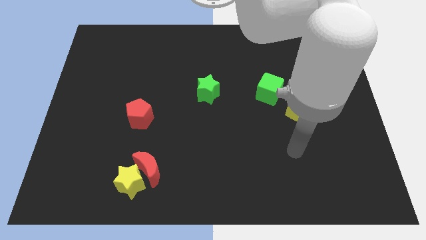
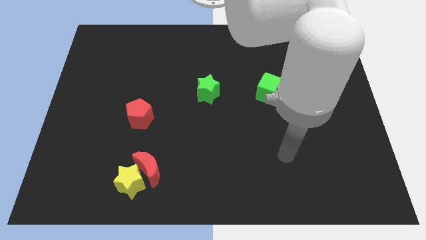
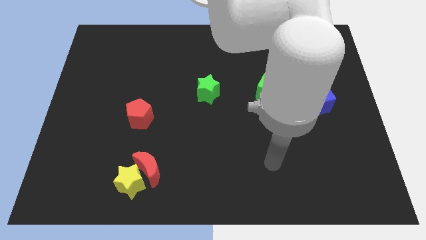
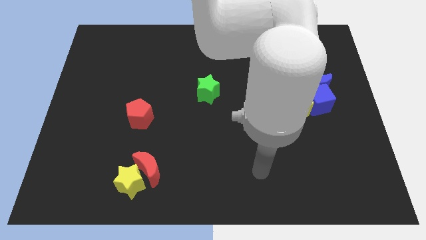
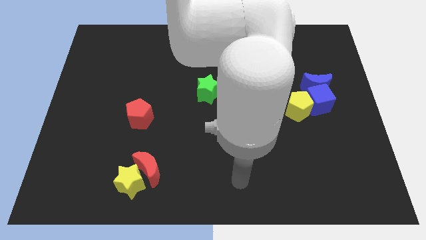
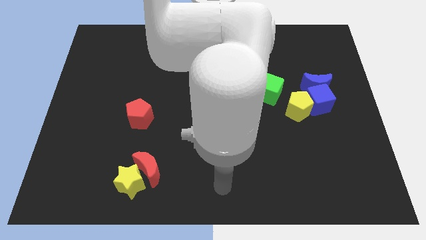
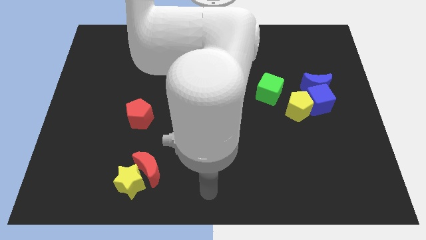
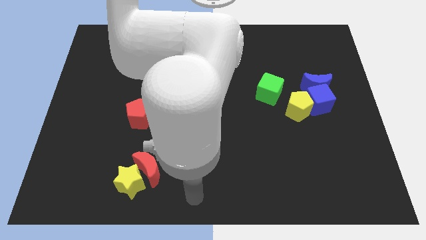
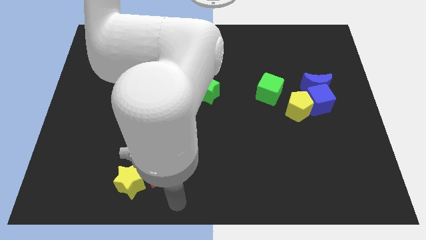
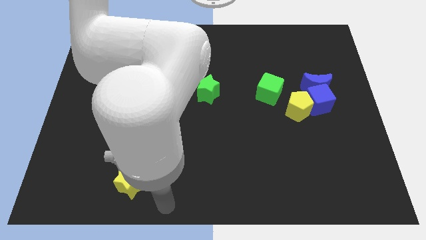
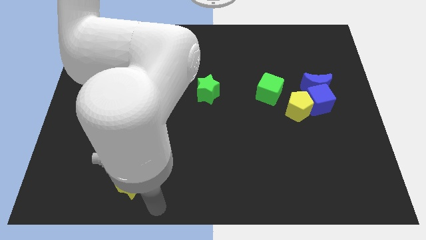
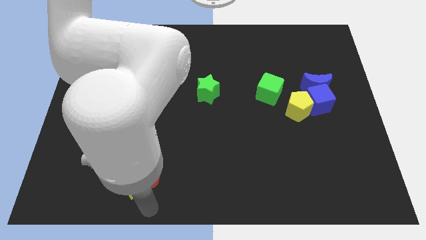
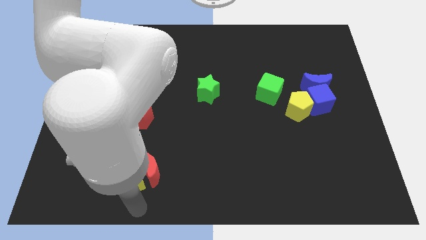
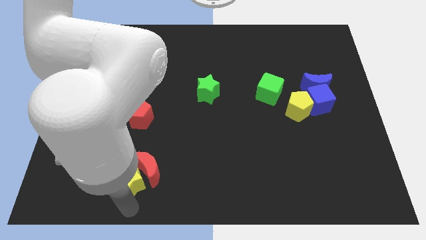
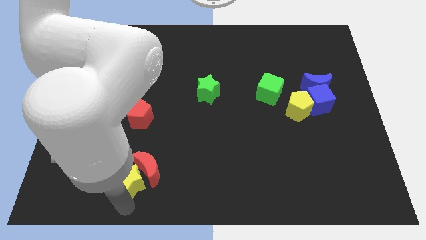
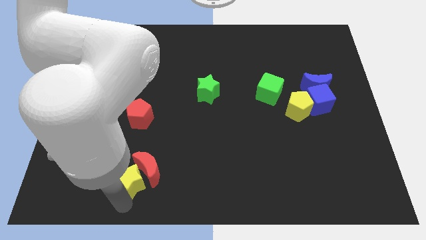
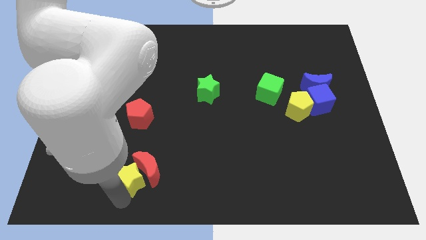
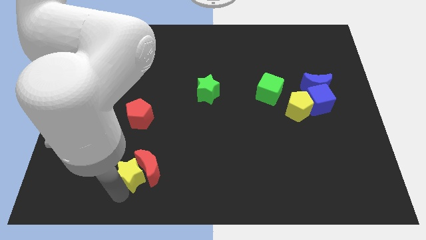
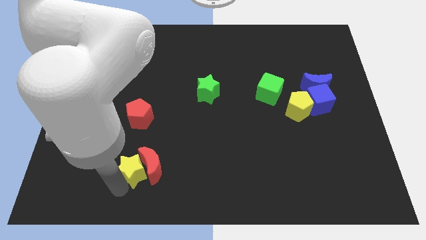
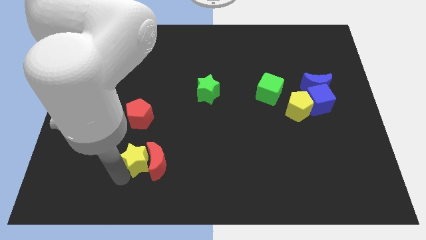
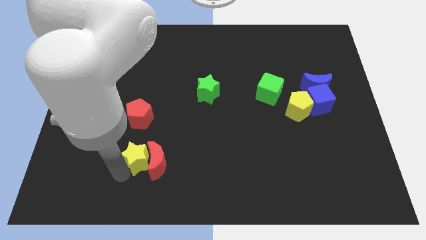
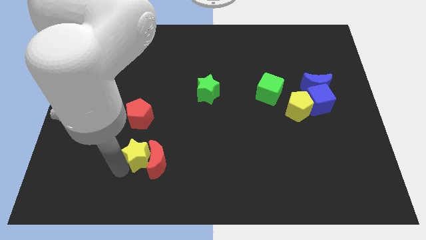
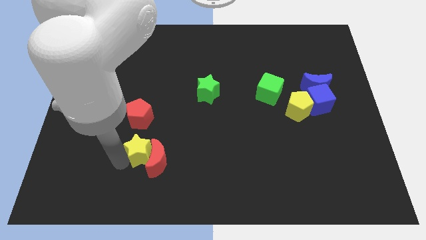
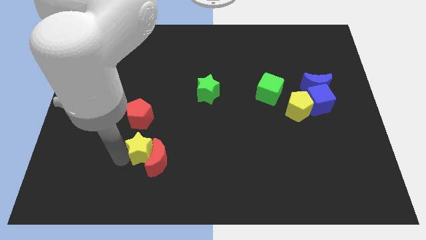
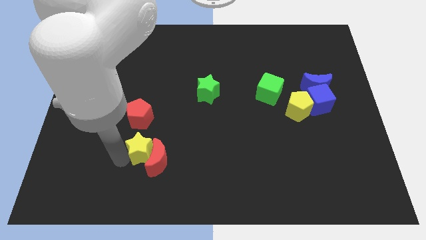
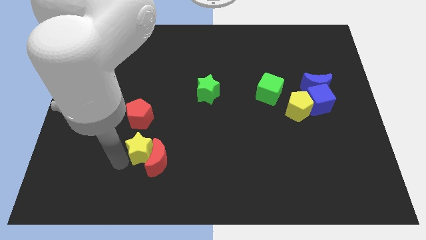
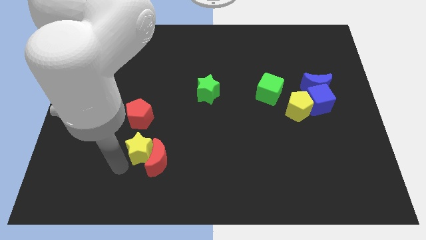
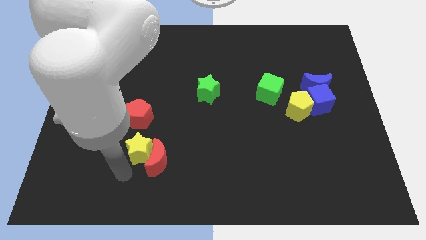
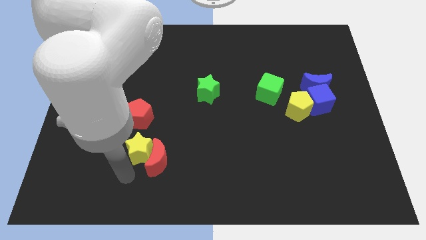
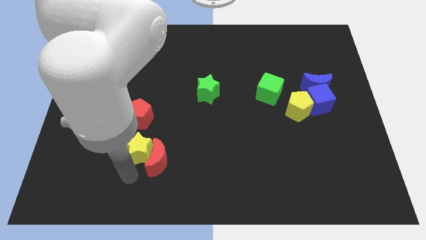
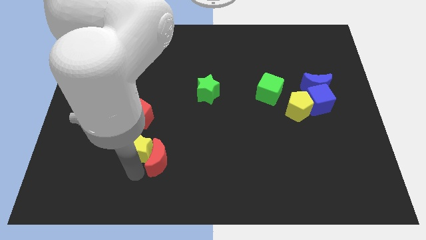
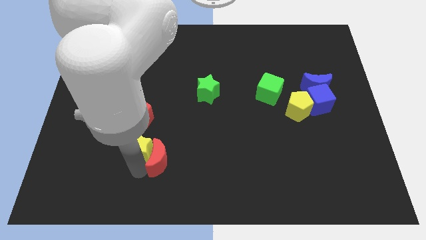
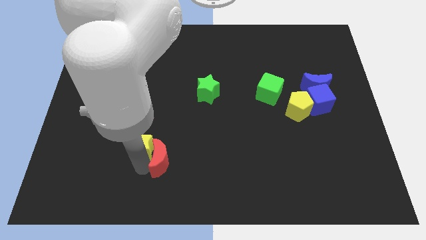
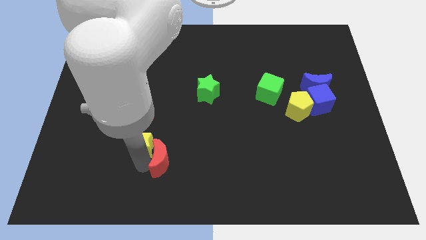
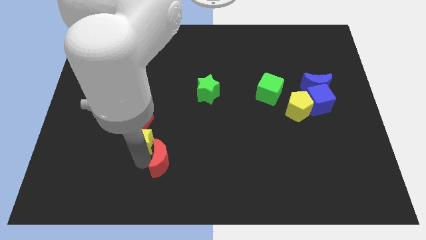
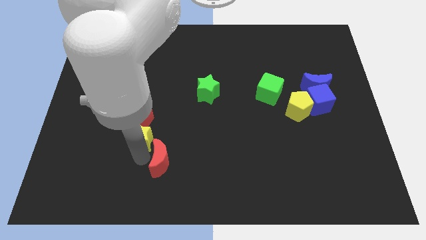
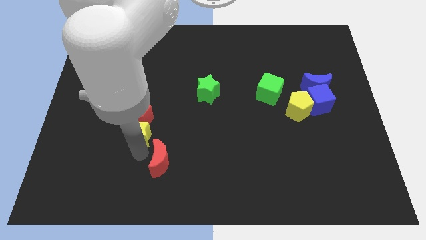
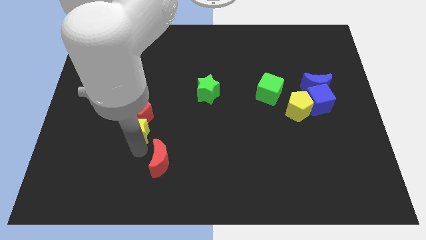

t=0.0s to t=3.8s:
push the yellow star close to the red pentagon

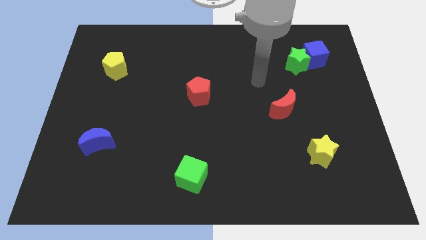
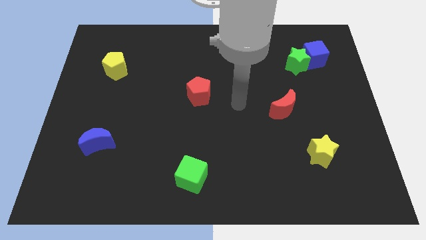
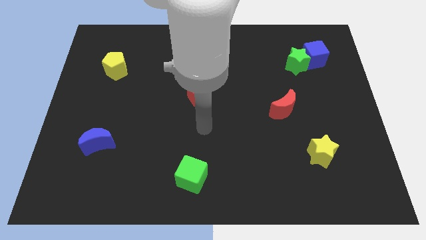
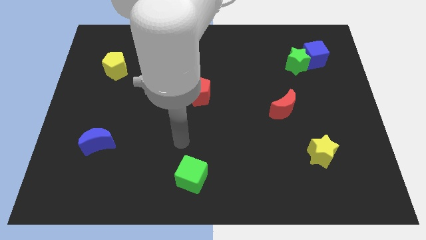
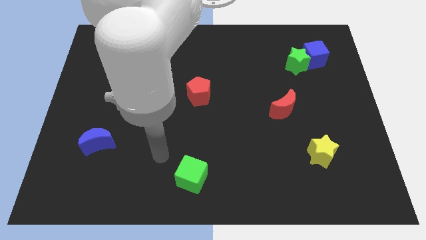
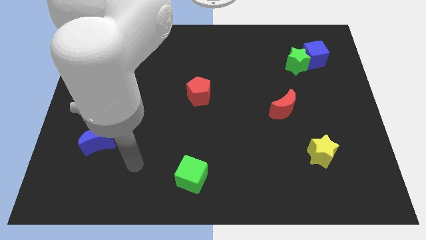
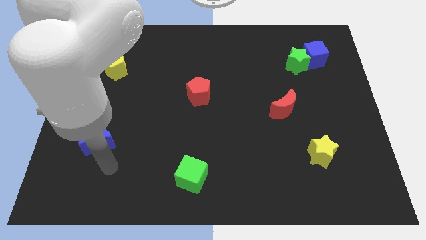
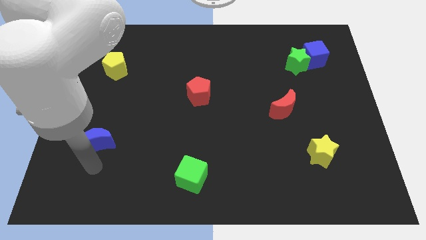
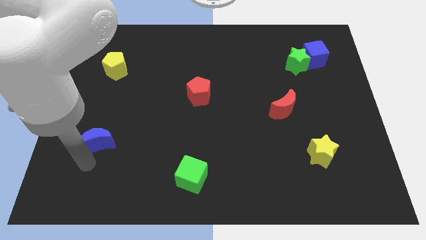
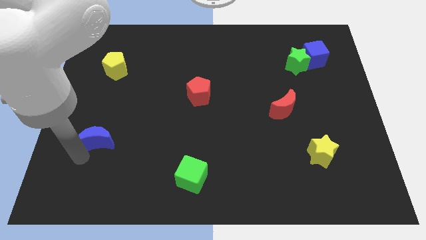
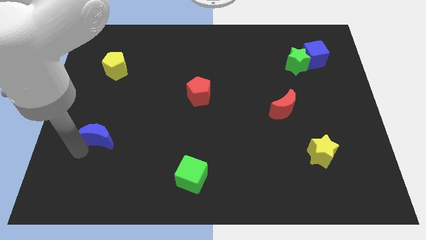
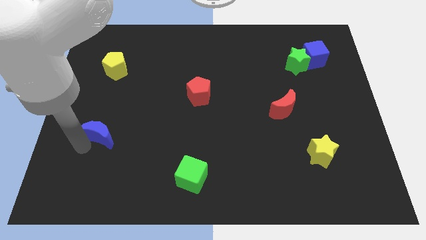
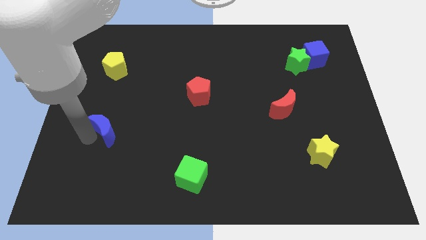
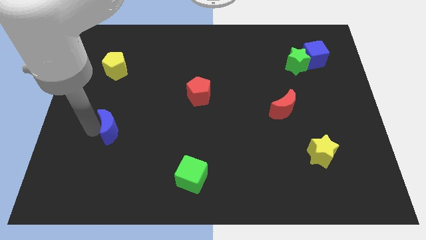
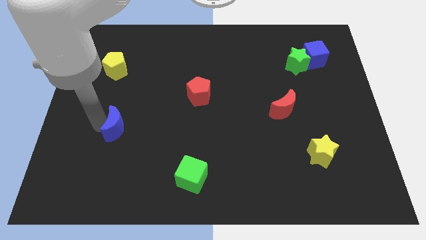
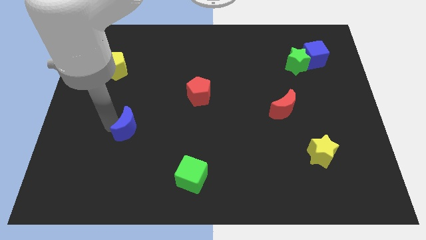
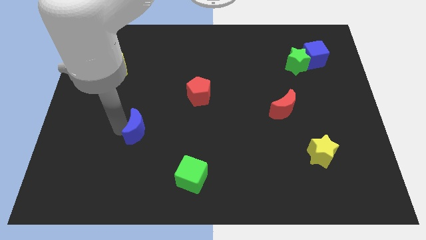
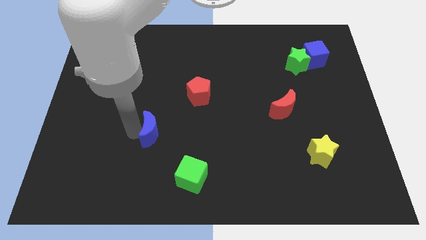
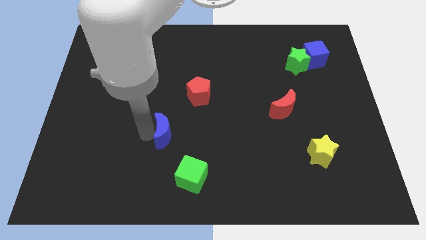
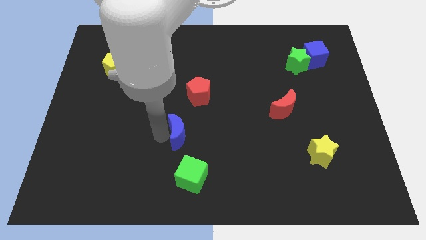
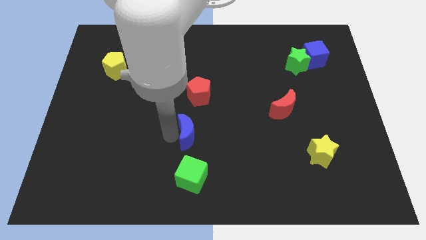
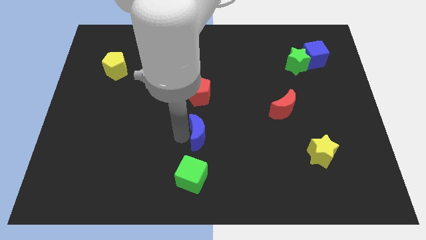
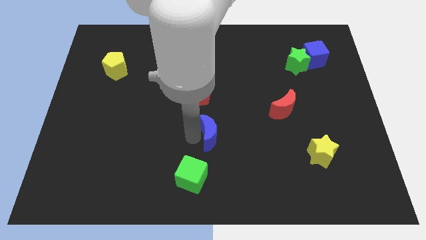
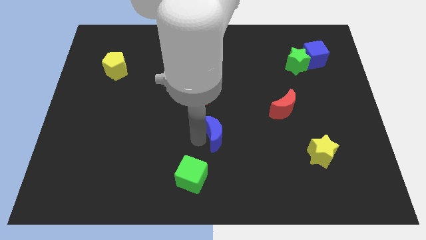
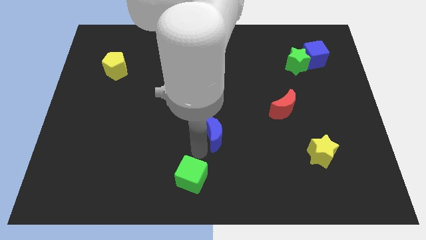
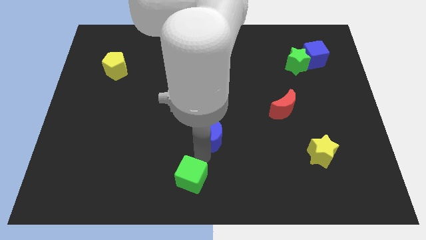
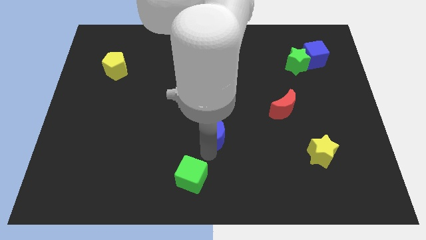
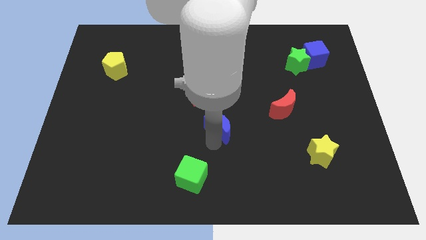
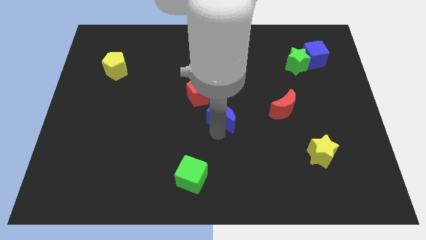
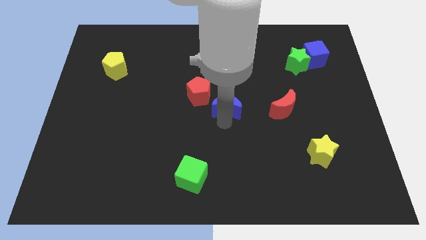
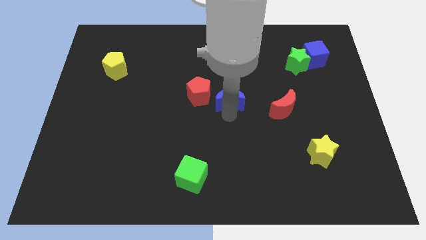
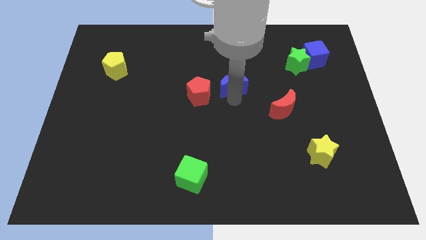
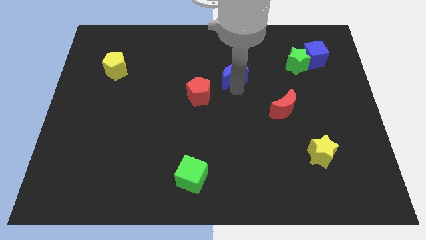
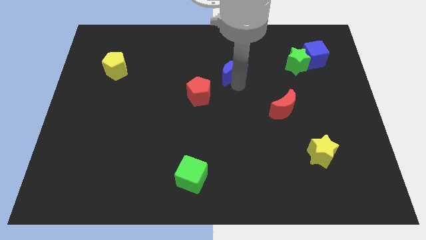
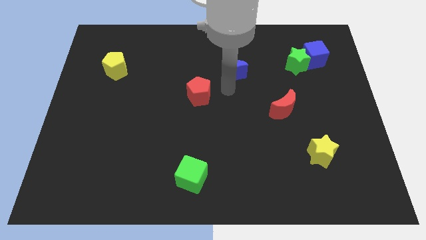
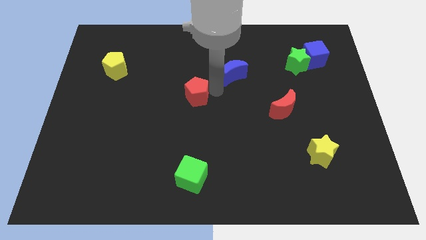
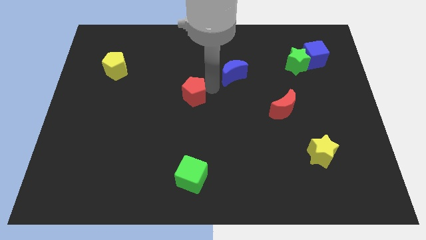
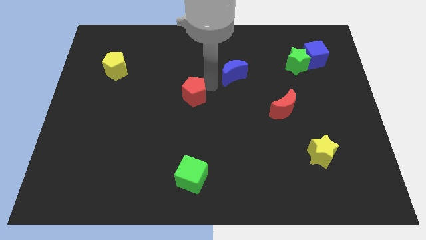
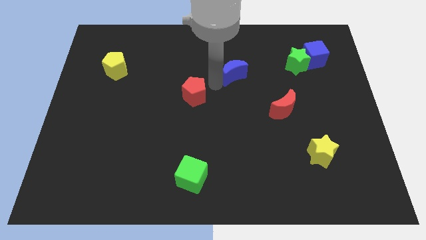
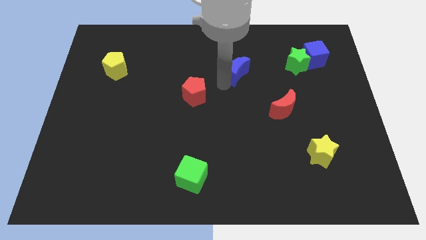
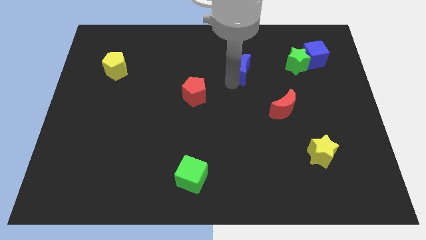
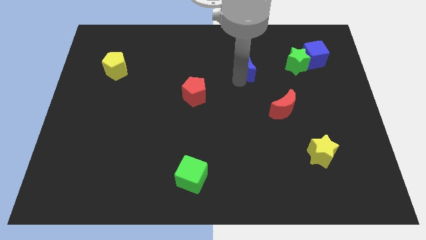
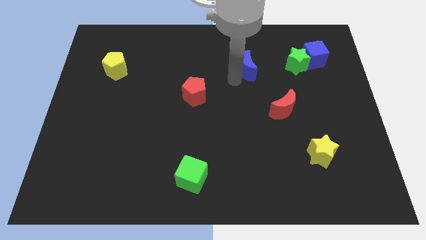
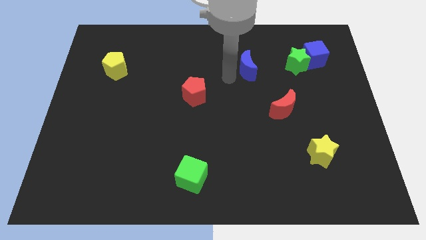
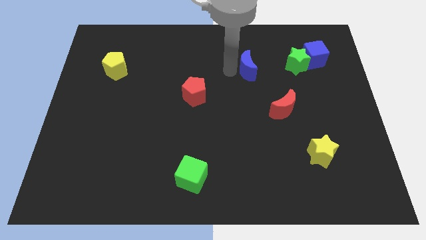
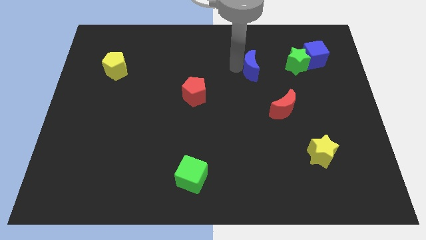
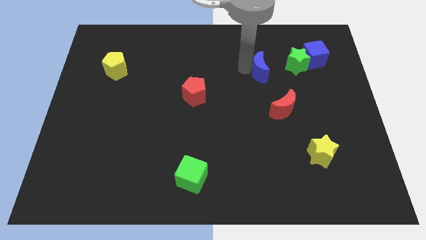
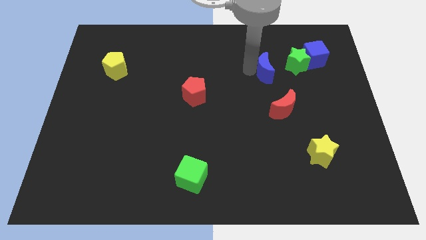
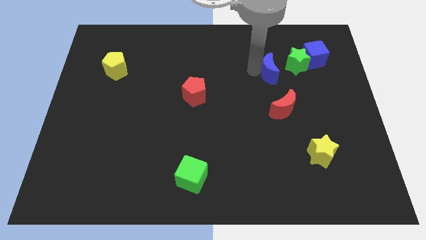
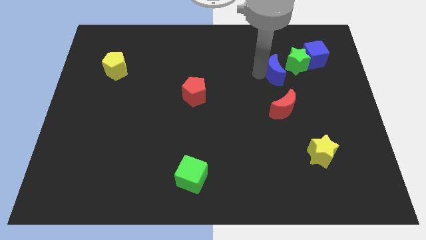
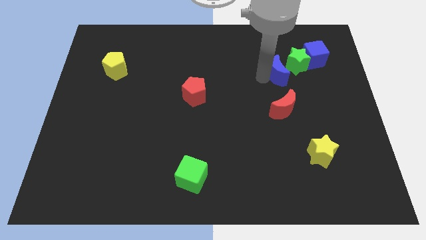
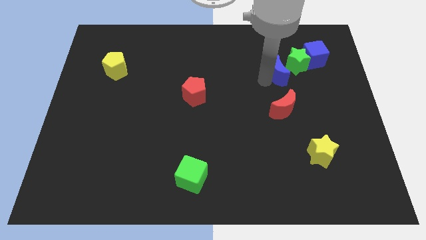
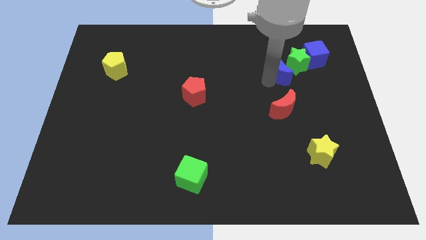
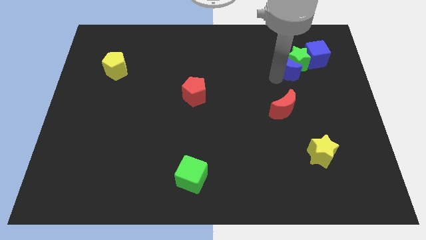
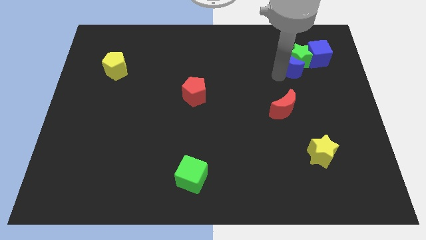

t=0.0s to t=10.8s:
move the blue moon to the green star
